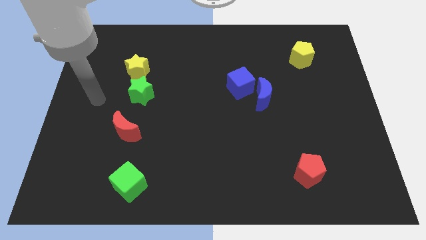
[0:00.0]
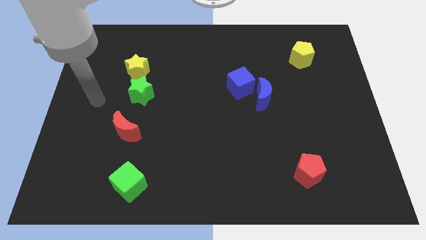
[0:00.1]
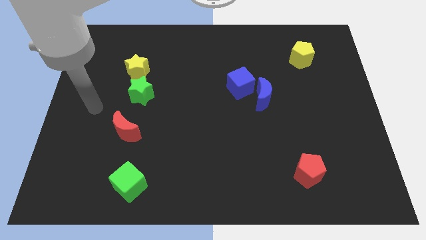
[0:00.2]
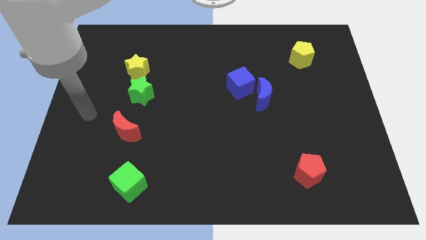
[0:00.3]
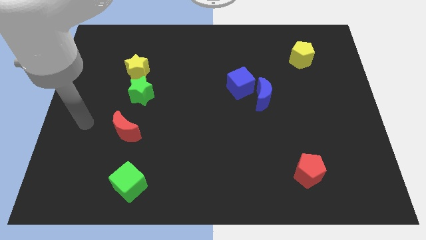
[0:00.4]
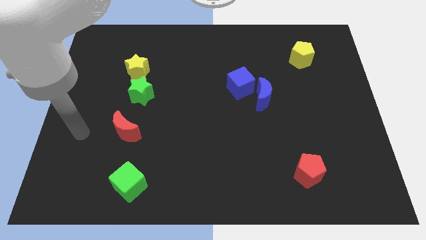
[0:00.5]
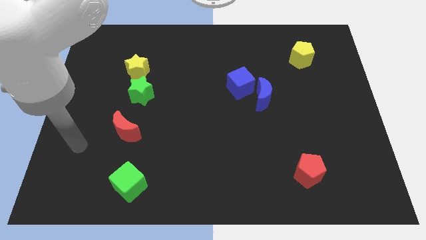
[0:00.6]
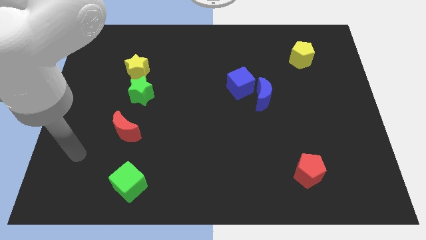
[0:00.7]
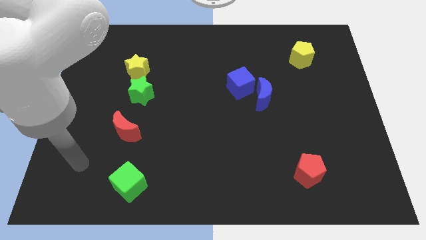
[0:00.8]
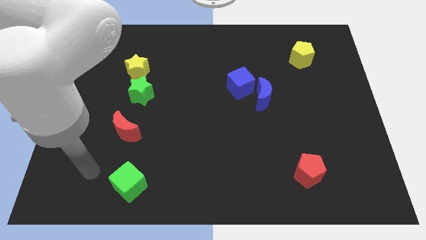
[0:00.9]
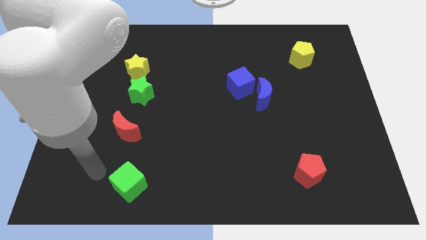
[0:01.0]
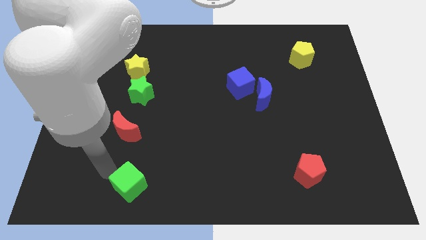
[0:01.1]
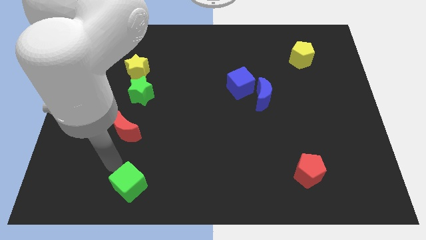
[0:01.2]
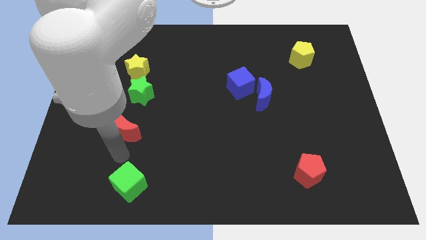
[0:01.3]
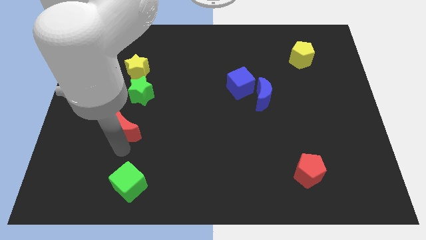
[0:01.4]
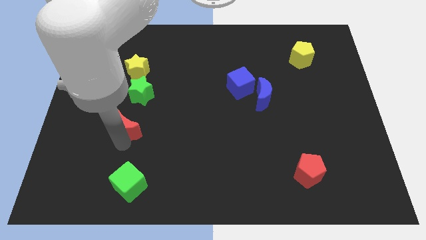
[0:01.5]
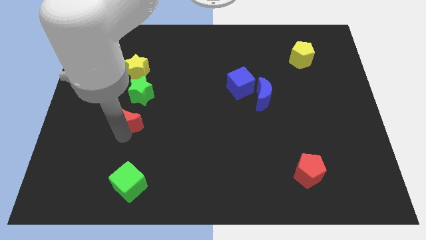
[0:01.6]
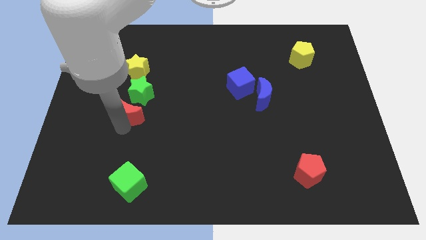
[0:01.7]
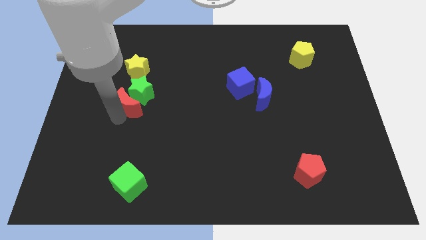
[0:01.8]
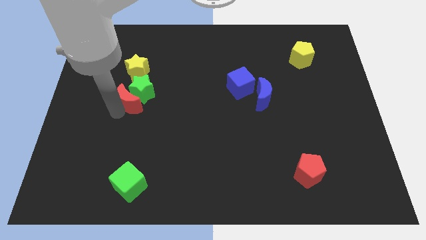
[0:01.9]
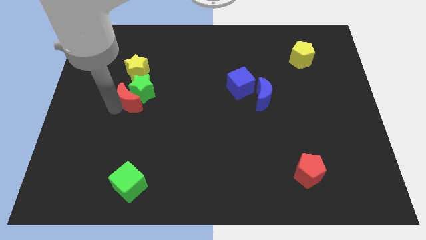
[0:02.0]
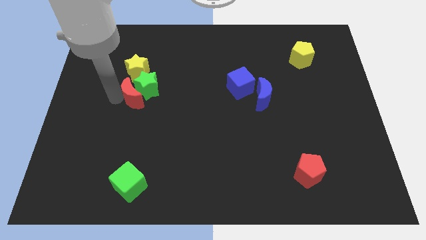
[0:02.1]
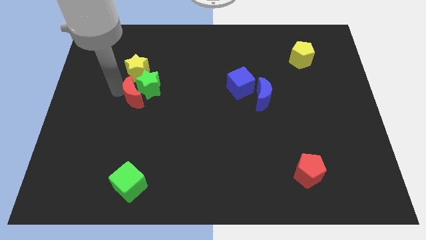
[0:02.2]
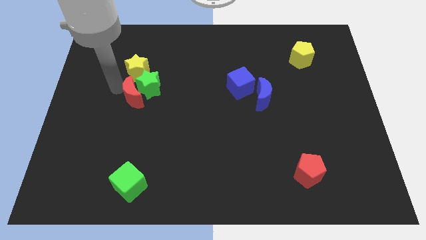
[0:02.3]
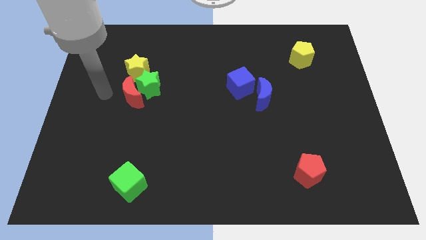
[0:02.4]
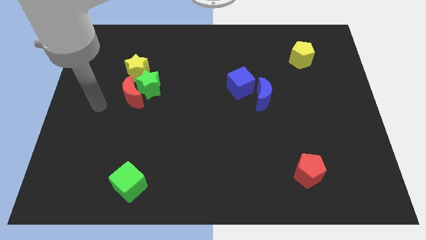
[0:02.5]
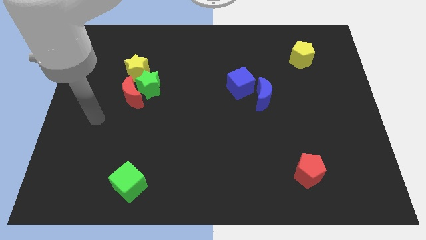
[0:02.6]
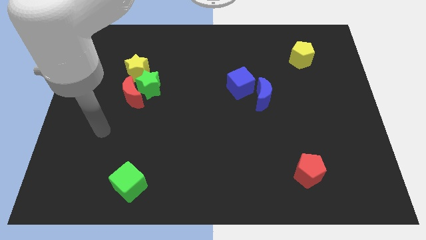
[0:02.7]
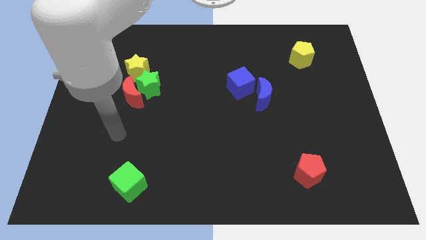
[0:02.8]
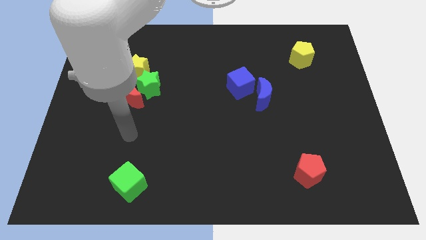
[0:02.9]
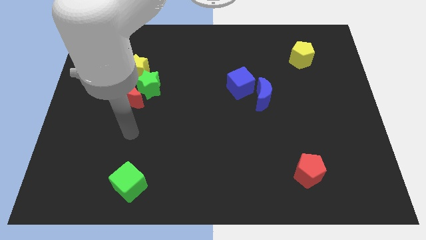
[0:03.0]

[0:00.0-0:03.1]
slide the red moon into the left side of the green star

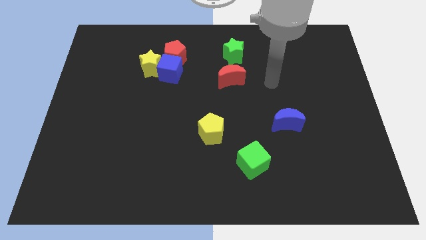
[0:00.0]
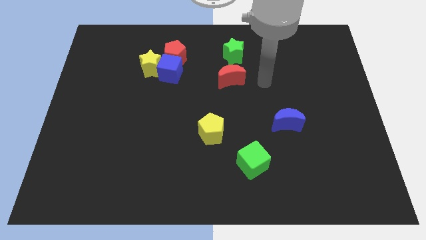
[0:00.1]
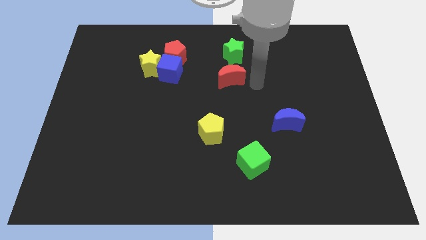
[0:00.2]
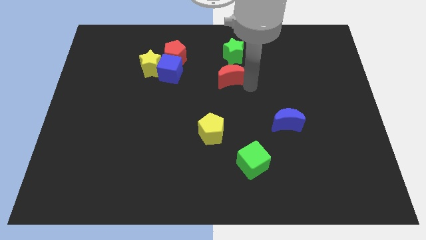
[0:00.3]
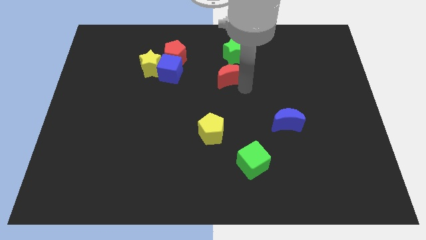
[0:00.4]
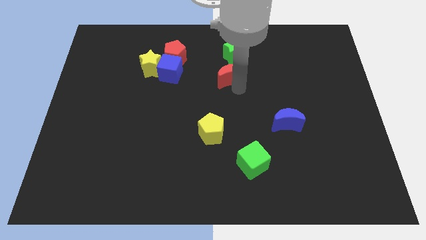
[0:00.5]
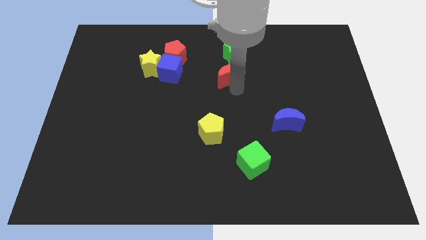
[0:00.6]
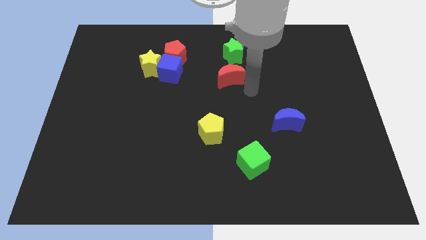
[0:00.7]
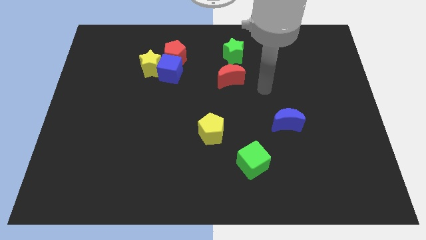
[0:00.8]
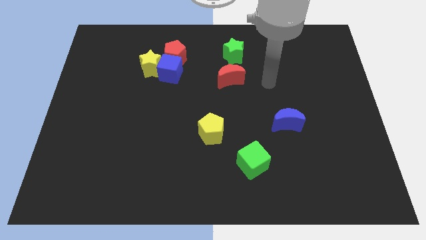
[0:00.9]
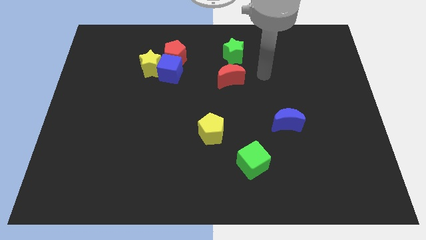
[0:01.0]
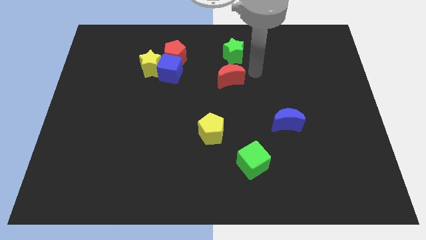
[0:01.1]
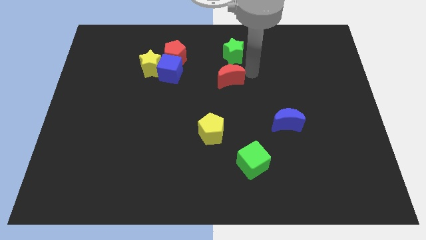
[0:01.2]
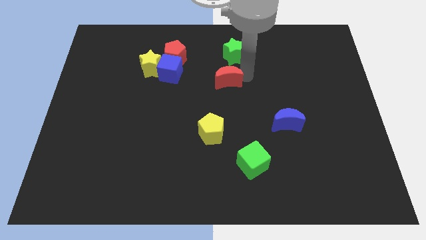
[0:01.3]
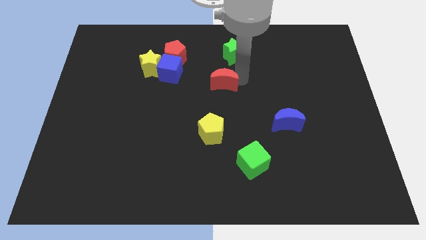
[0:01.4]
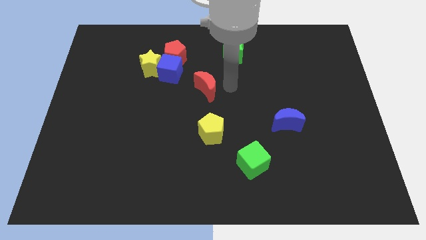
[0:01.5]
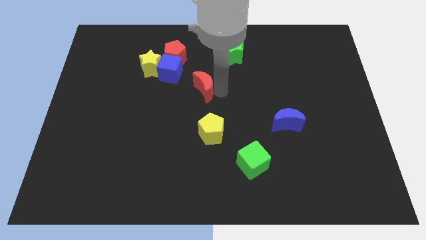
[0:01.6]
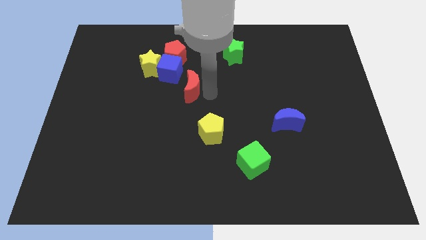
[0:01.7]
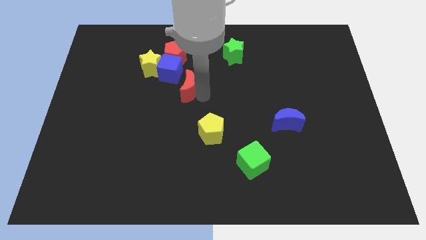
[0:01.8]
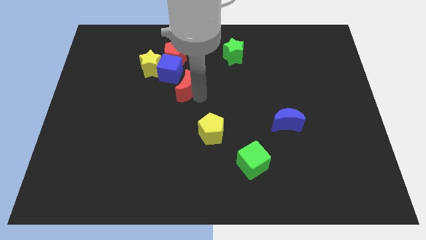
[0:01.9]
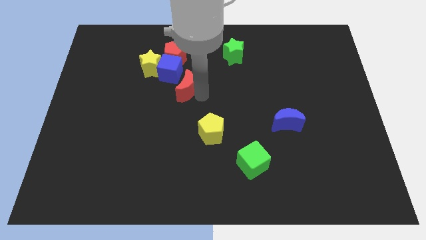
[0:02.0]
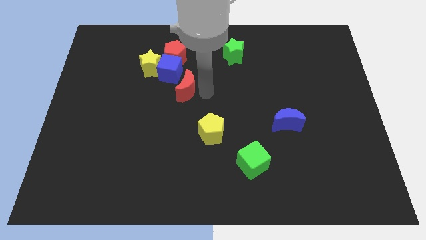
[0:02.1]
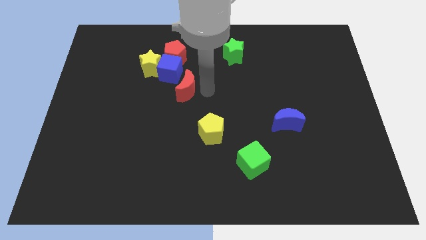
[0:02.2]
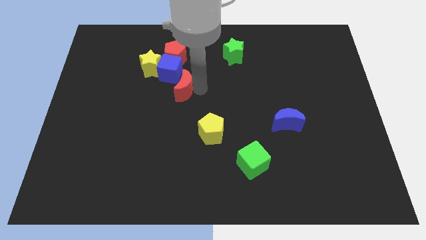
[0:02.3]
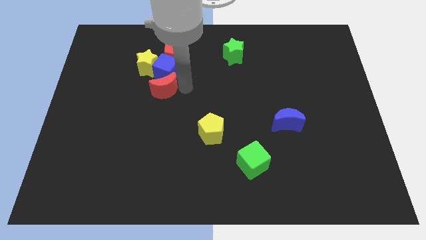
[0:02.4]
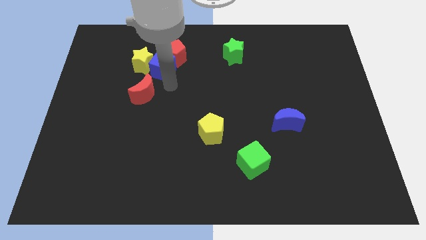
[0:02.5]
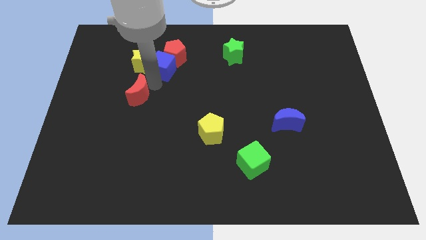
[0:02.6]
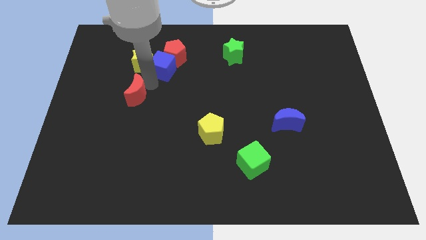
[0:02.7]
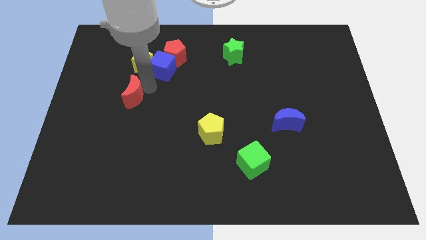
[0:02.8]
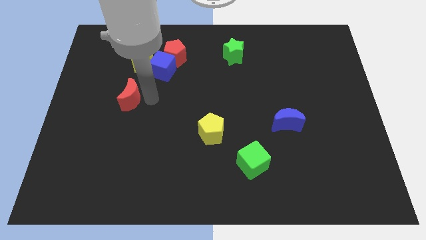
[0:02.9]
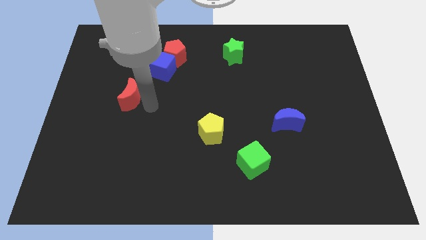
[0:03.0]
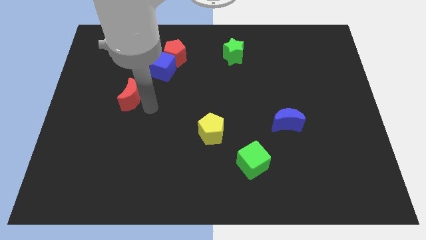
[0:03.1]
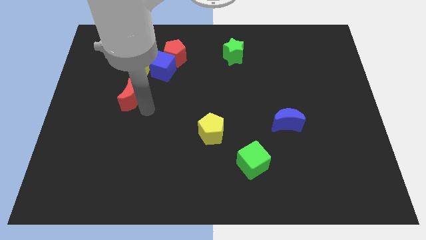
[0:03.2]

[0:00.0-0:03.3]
push red crescent below yellow star

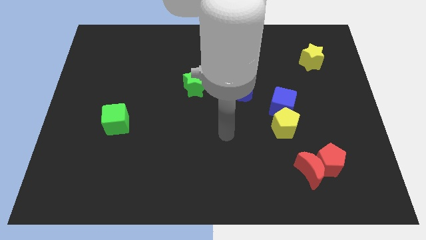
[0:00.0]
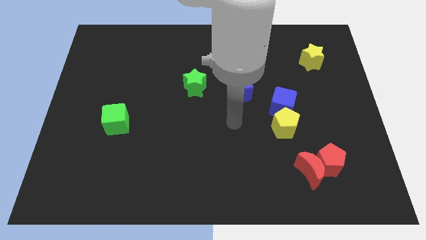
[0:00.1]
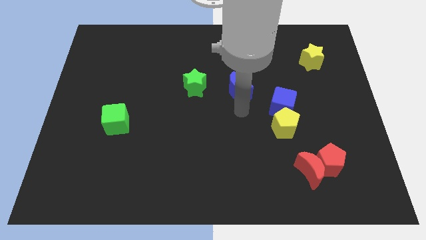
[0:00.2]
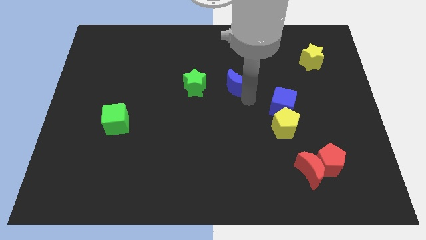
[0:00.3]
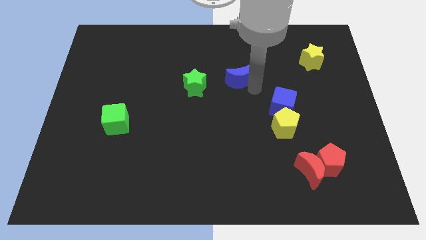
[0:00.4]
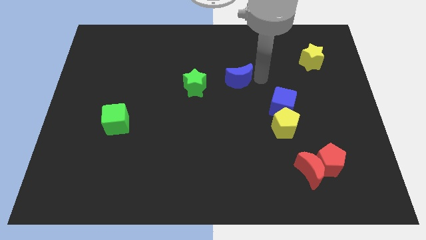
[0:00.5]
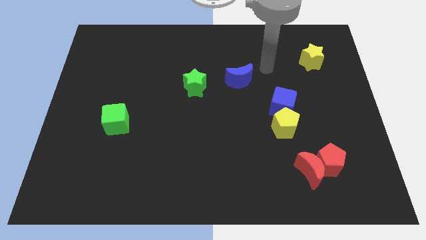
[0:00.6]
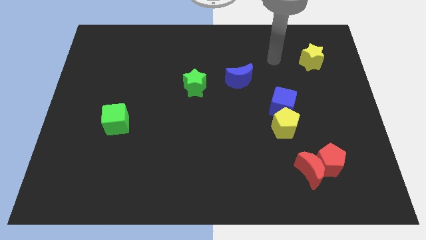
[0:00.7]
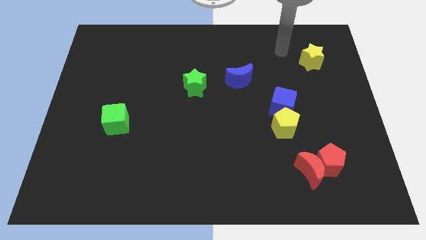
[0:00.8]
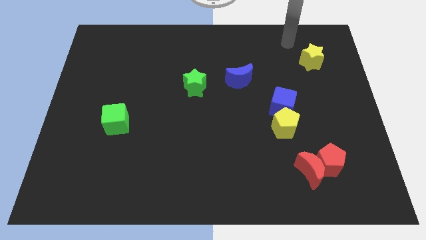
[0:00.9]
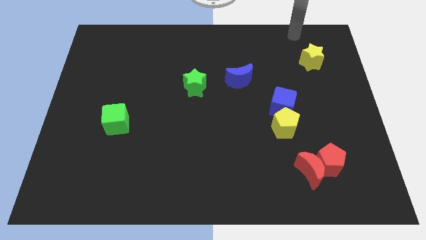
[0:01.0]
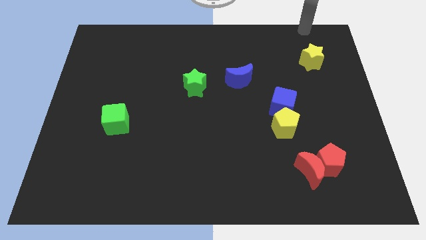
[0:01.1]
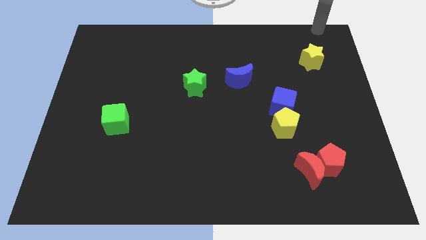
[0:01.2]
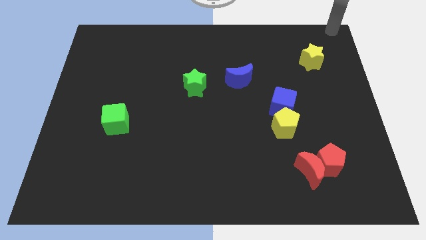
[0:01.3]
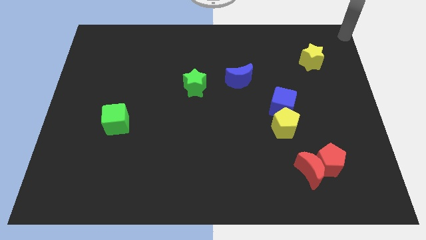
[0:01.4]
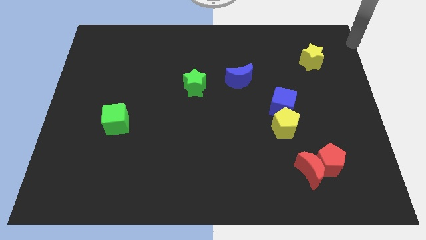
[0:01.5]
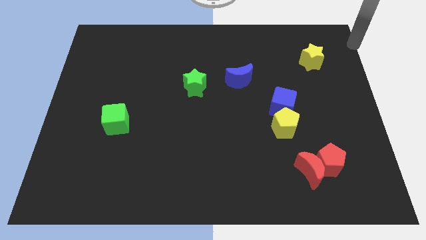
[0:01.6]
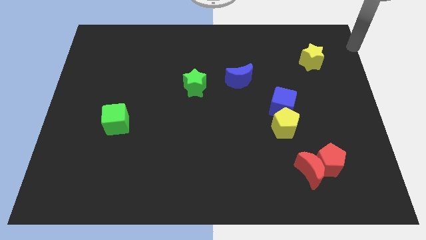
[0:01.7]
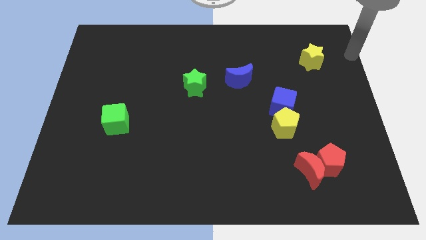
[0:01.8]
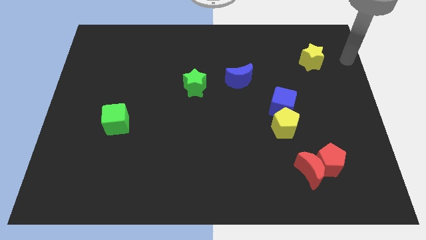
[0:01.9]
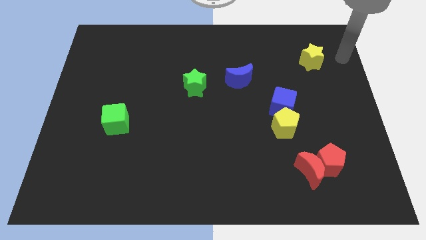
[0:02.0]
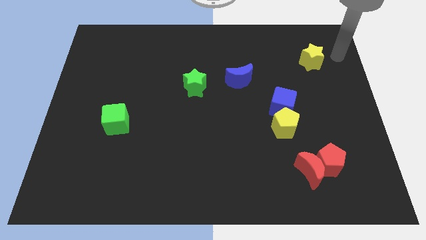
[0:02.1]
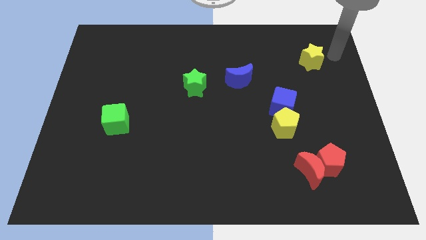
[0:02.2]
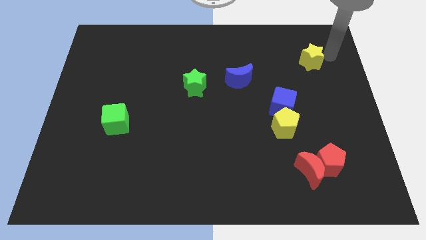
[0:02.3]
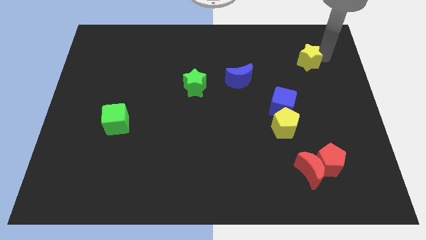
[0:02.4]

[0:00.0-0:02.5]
touch the yellow star

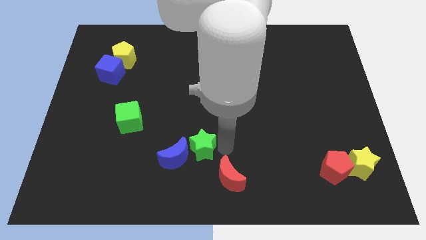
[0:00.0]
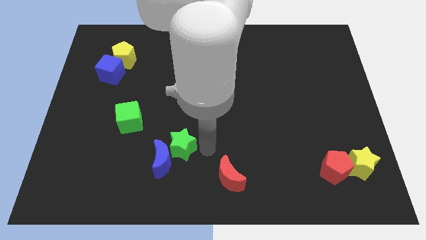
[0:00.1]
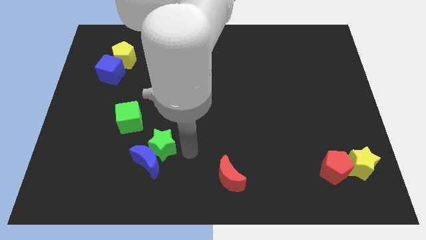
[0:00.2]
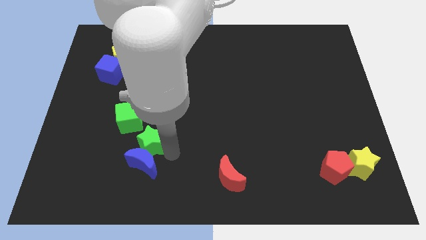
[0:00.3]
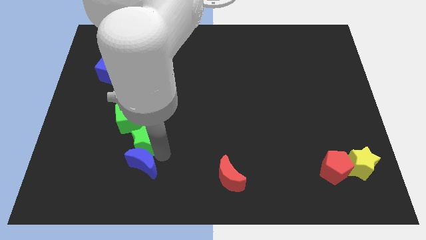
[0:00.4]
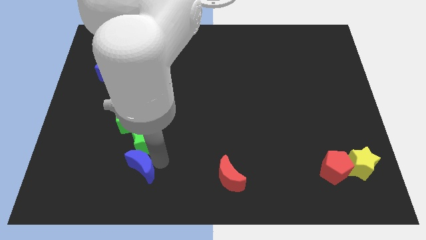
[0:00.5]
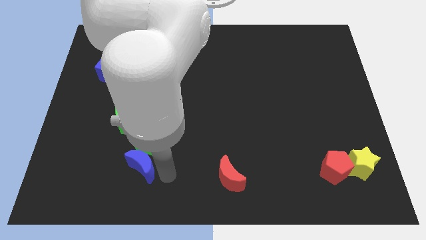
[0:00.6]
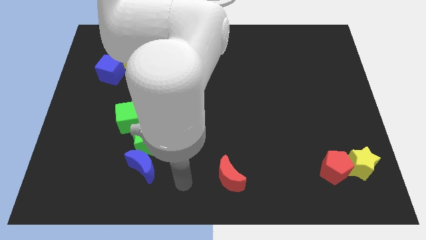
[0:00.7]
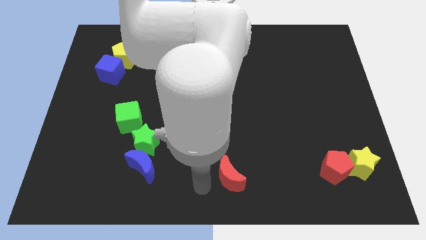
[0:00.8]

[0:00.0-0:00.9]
place green star to the bottom right of green cube
